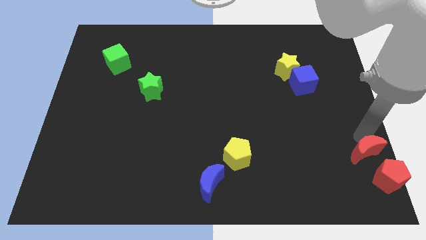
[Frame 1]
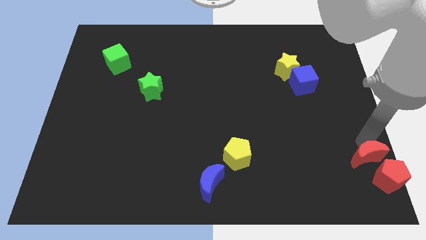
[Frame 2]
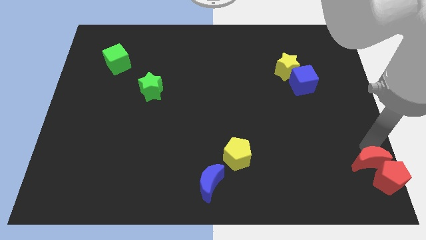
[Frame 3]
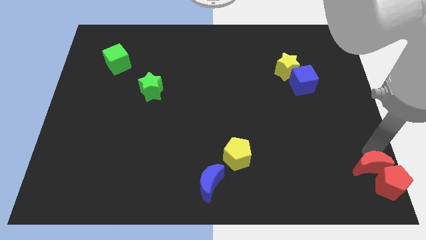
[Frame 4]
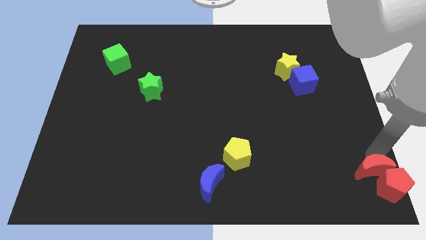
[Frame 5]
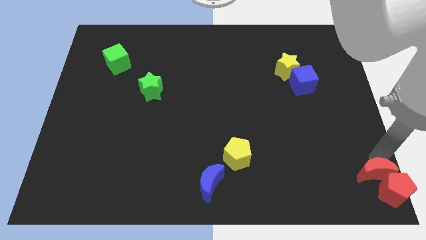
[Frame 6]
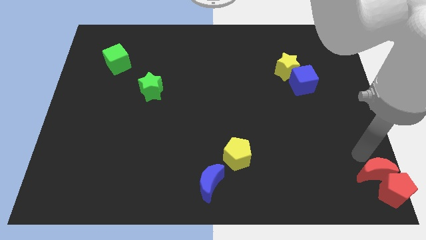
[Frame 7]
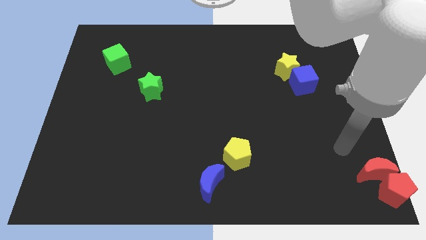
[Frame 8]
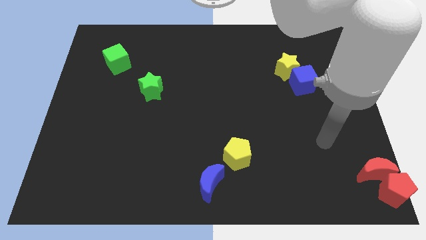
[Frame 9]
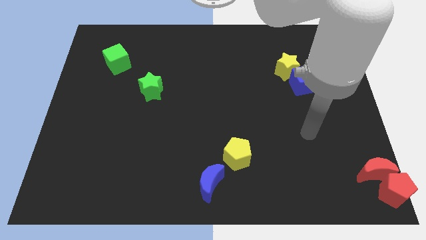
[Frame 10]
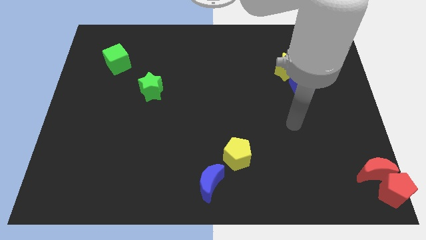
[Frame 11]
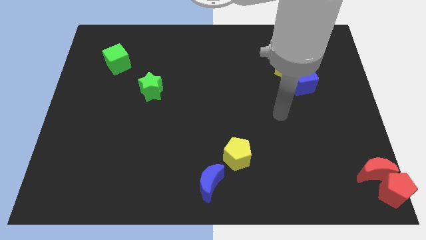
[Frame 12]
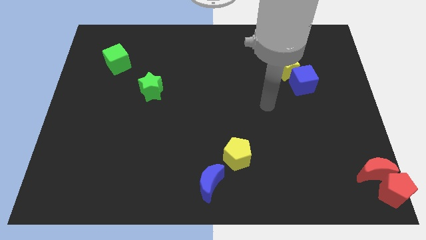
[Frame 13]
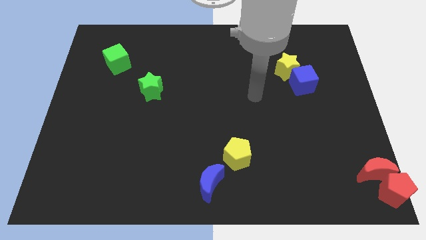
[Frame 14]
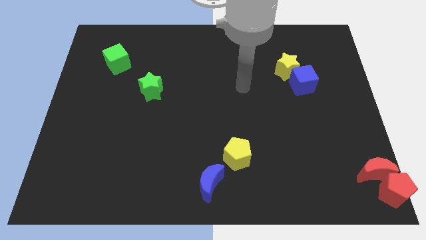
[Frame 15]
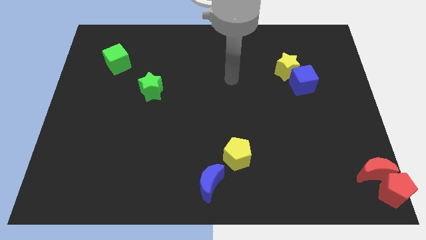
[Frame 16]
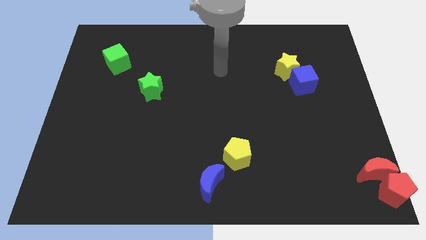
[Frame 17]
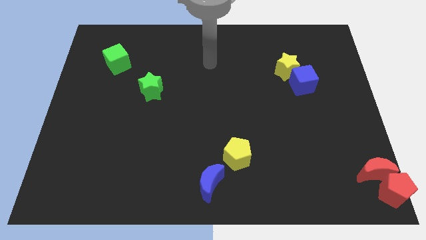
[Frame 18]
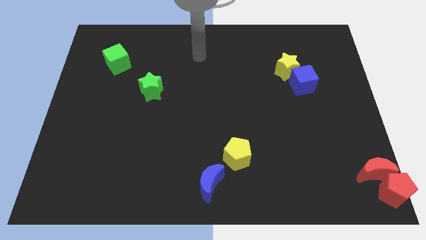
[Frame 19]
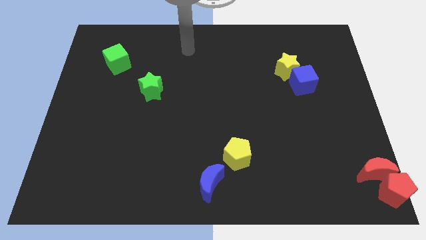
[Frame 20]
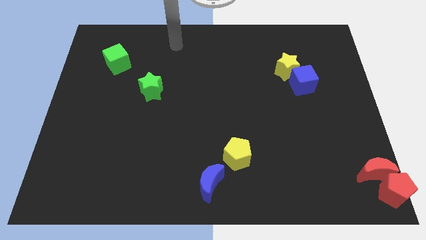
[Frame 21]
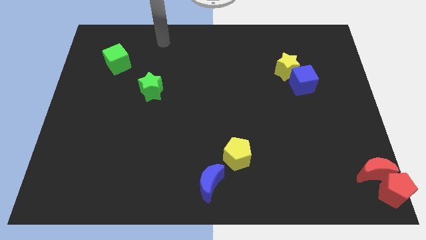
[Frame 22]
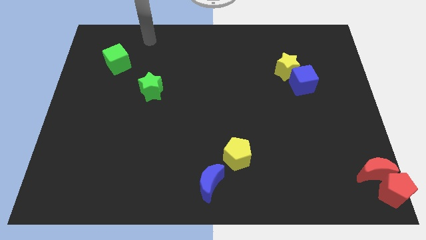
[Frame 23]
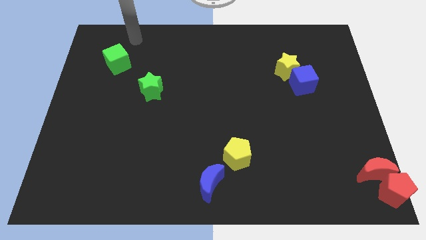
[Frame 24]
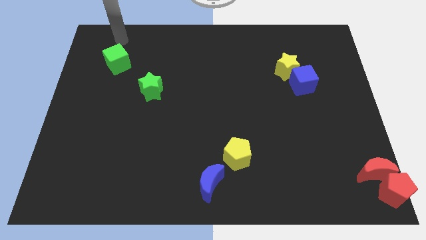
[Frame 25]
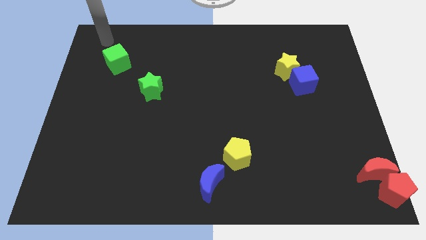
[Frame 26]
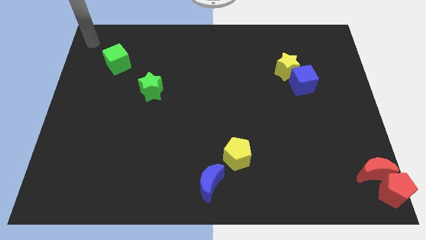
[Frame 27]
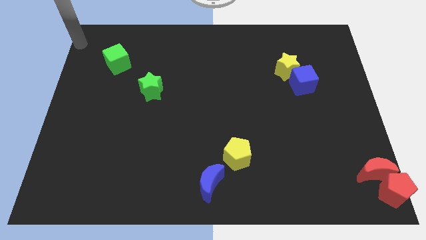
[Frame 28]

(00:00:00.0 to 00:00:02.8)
move your hand away from the red crescent

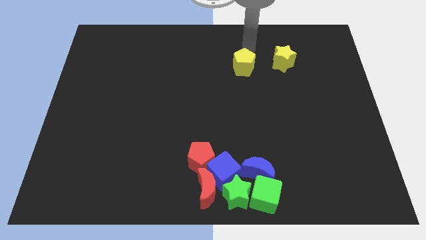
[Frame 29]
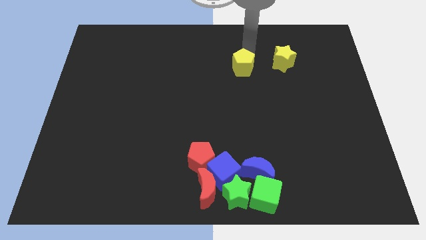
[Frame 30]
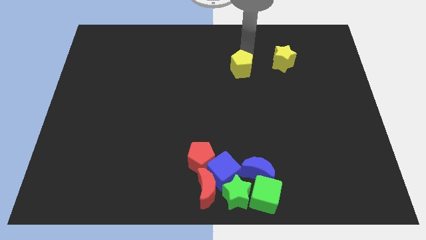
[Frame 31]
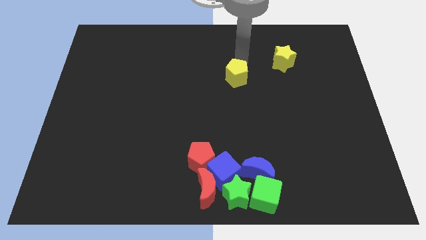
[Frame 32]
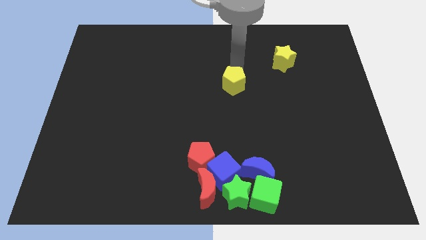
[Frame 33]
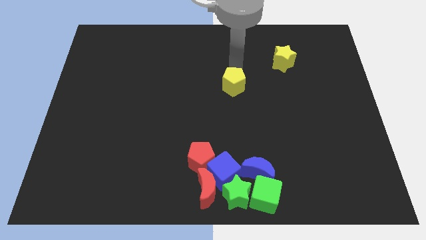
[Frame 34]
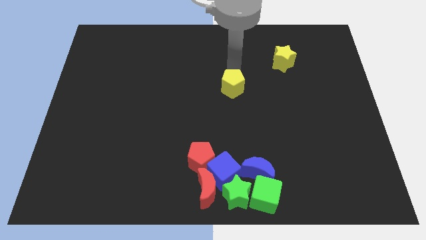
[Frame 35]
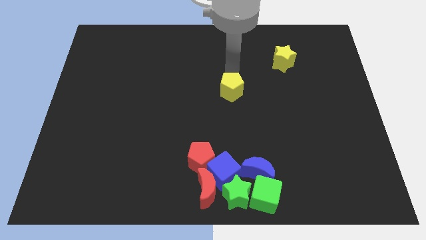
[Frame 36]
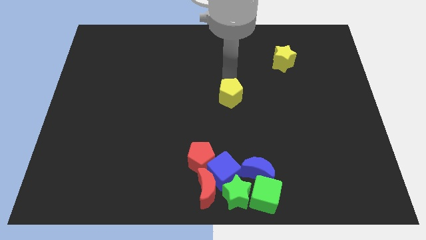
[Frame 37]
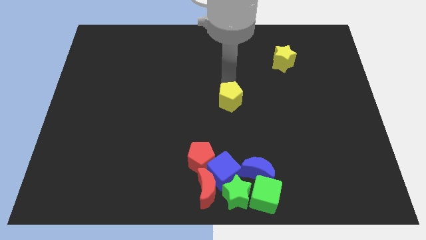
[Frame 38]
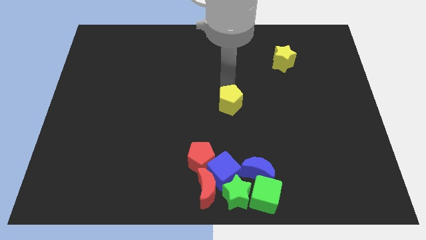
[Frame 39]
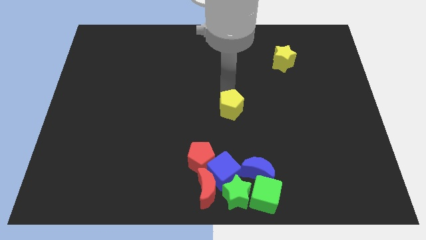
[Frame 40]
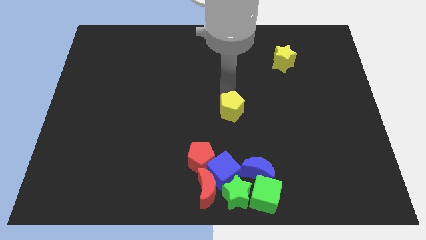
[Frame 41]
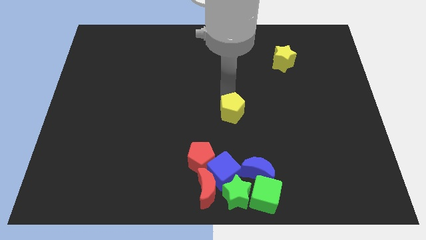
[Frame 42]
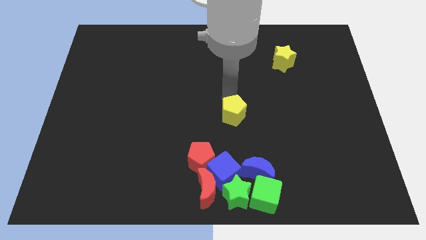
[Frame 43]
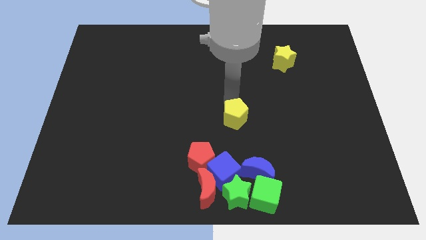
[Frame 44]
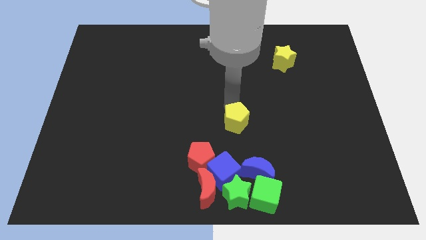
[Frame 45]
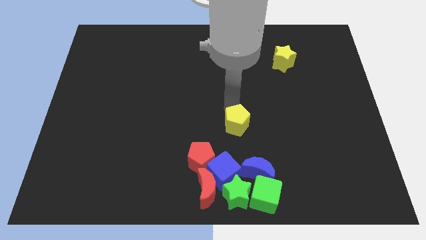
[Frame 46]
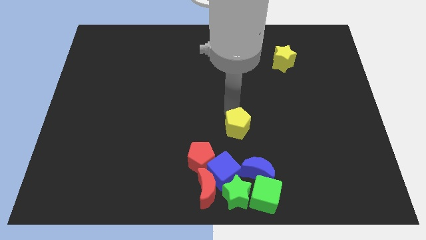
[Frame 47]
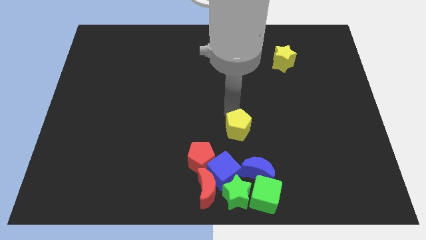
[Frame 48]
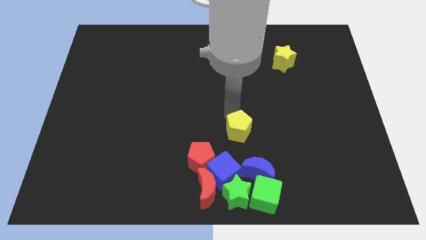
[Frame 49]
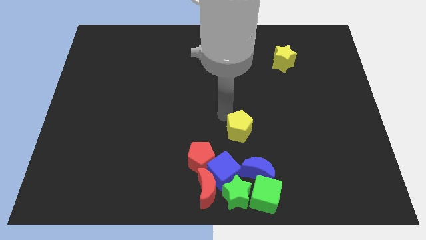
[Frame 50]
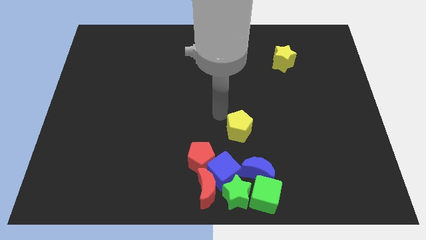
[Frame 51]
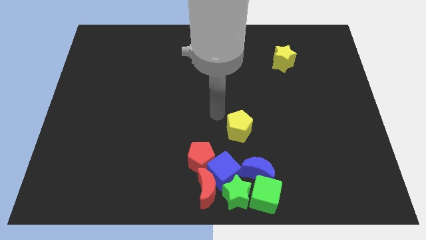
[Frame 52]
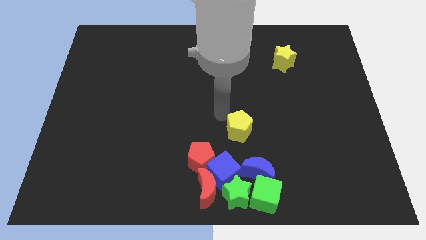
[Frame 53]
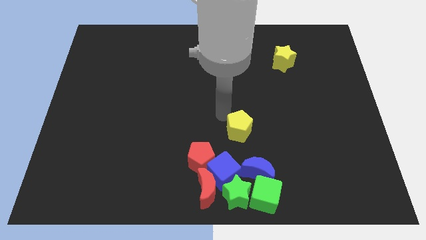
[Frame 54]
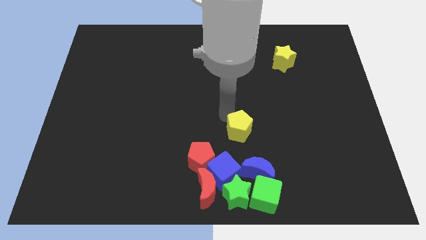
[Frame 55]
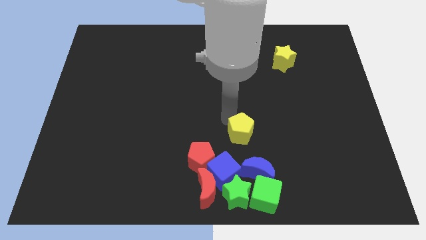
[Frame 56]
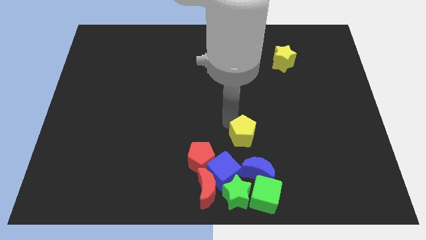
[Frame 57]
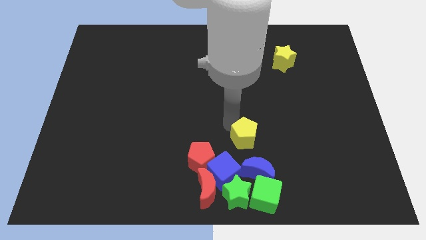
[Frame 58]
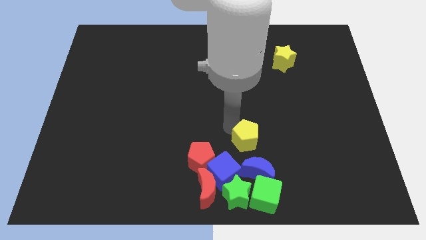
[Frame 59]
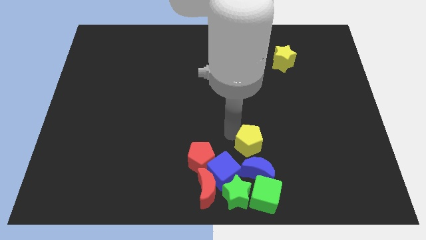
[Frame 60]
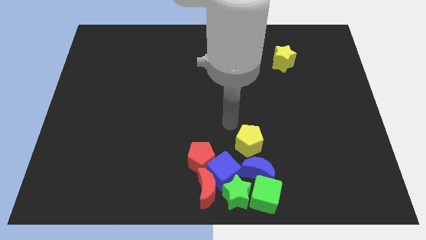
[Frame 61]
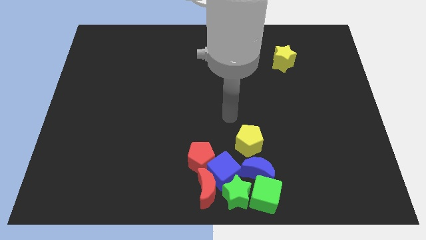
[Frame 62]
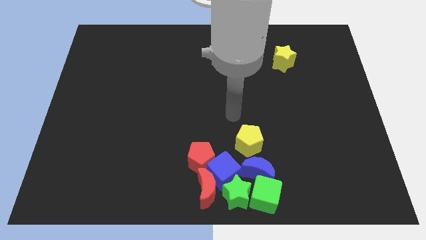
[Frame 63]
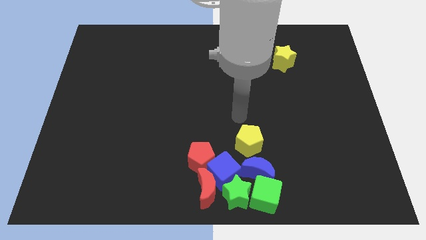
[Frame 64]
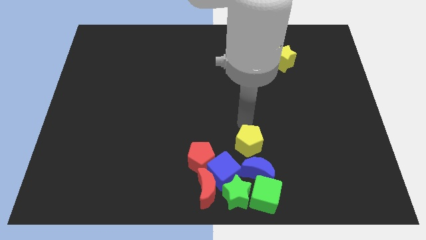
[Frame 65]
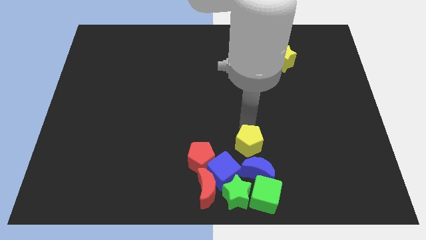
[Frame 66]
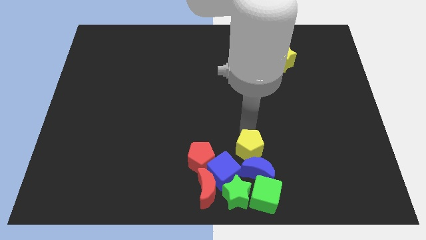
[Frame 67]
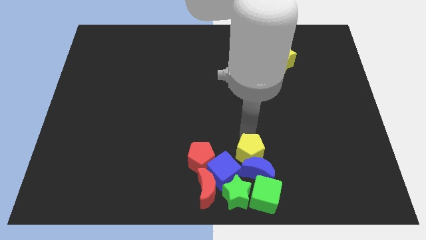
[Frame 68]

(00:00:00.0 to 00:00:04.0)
drag the yellow pentagon into a group of blocks

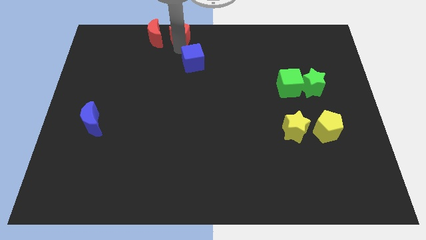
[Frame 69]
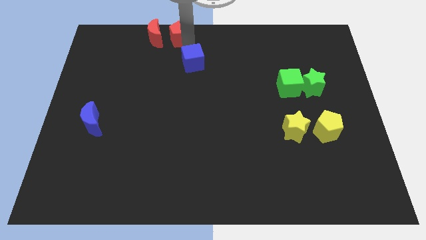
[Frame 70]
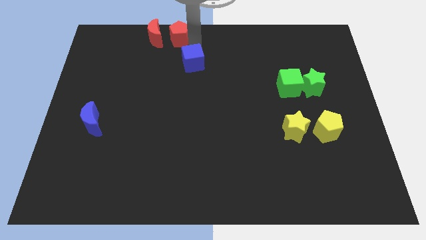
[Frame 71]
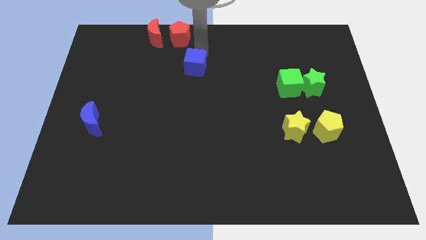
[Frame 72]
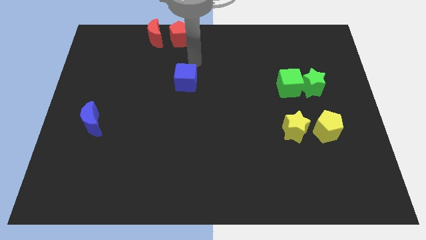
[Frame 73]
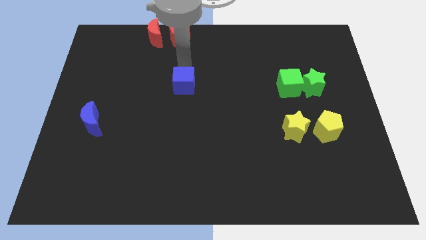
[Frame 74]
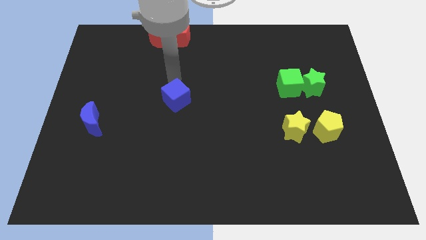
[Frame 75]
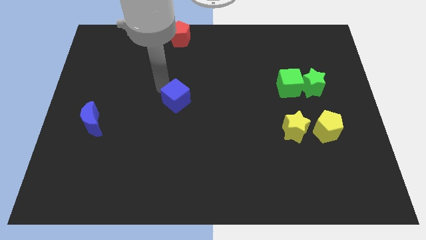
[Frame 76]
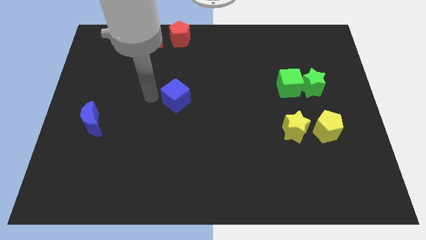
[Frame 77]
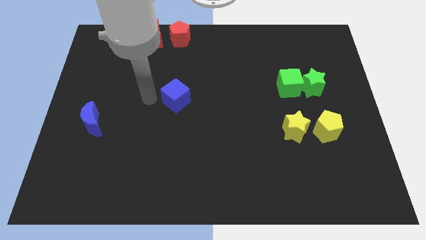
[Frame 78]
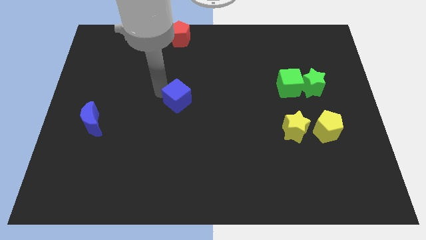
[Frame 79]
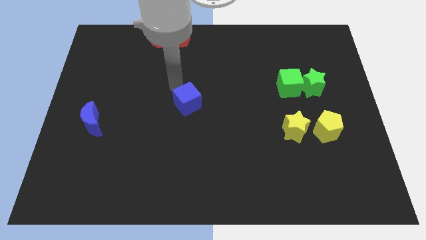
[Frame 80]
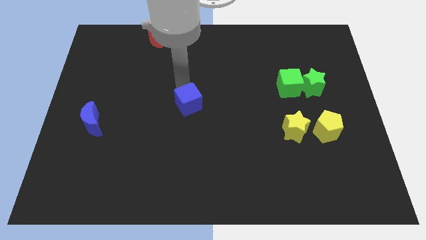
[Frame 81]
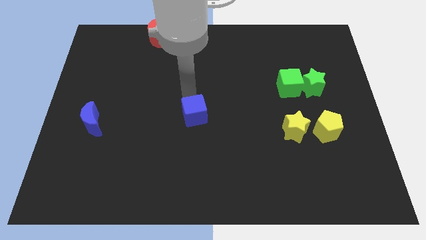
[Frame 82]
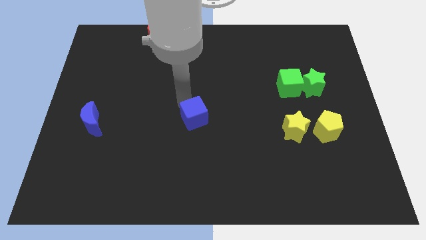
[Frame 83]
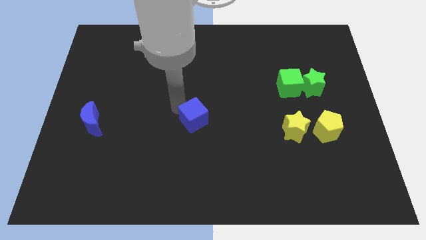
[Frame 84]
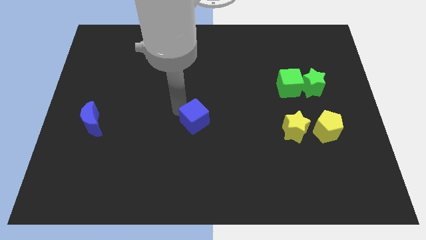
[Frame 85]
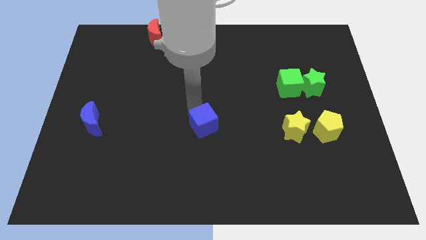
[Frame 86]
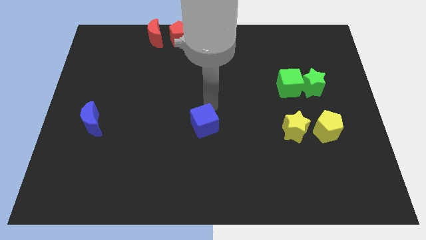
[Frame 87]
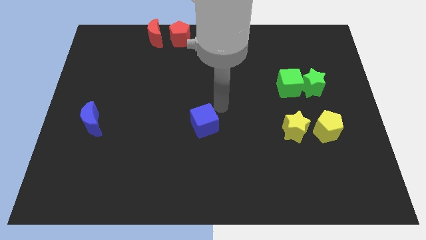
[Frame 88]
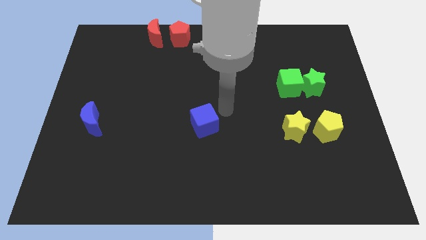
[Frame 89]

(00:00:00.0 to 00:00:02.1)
push the blue cube to the horizontal right side of the blue moon

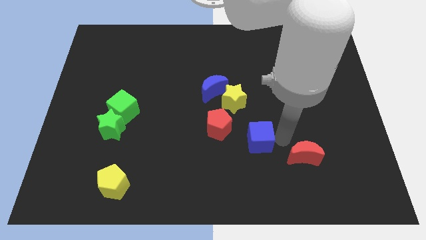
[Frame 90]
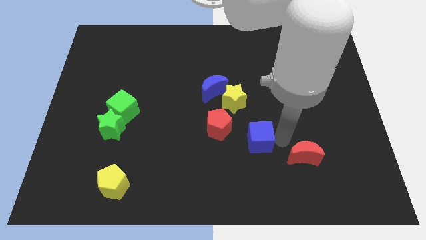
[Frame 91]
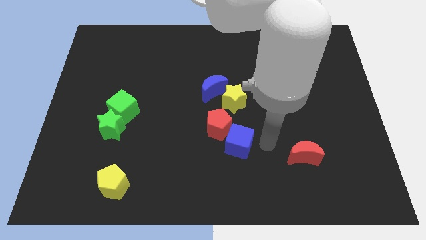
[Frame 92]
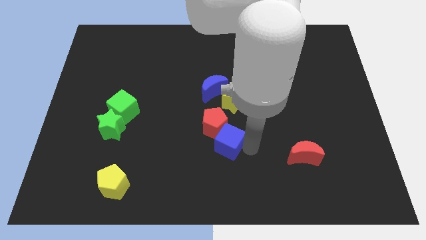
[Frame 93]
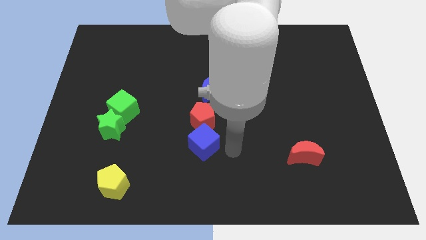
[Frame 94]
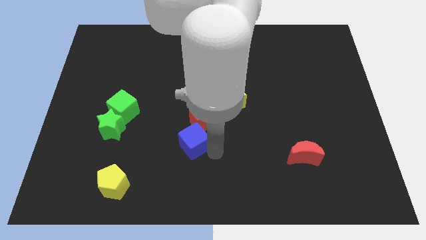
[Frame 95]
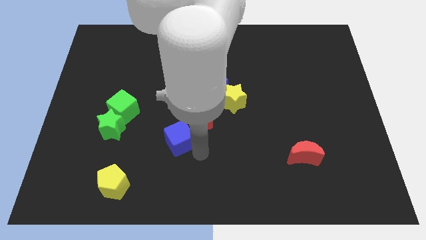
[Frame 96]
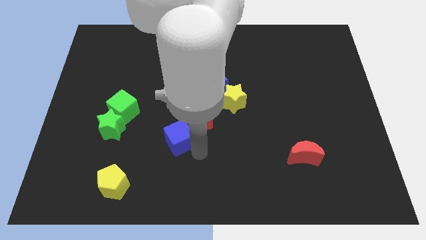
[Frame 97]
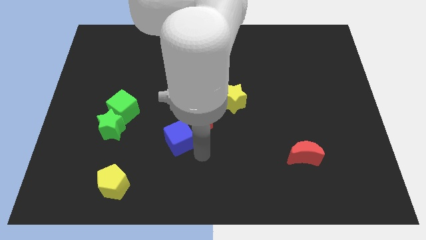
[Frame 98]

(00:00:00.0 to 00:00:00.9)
push the blue cube right to the green star
